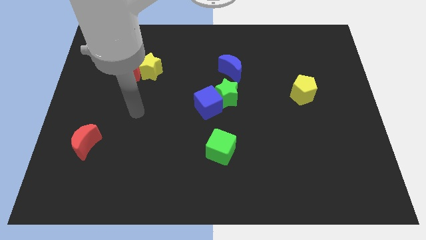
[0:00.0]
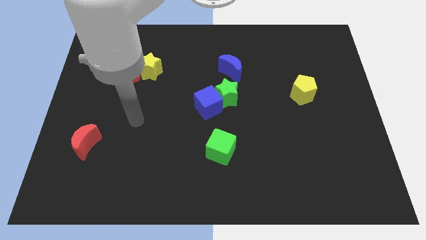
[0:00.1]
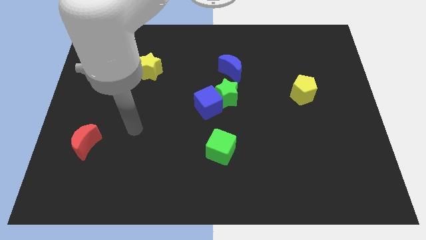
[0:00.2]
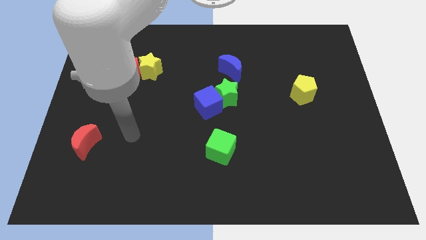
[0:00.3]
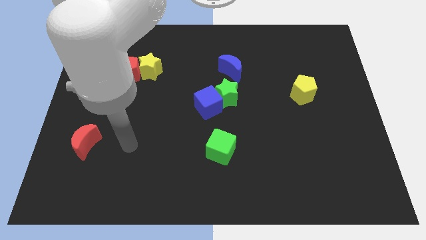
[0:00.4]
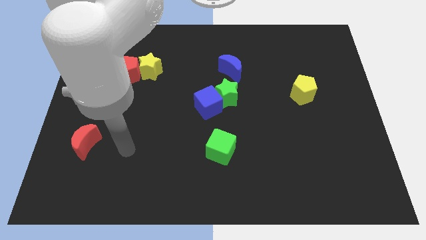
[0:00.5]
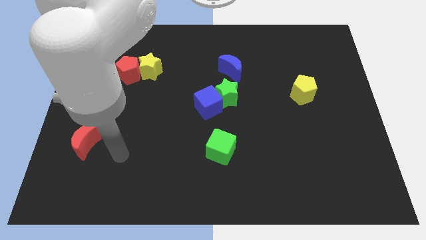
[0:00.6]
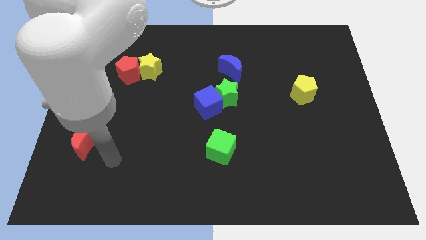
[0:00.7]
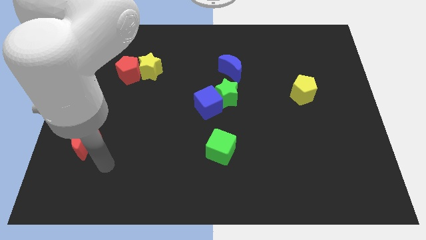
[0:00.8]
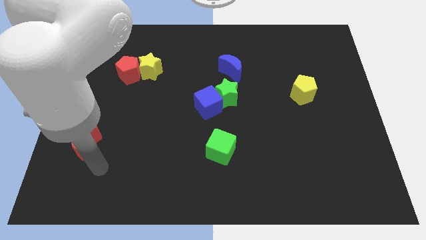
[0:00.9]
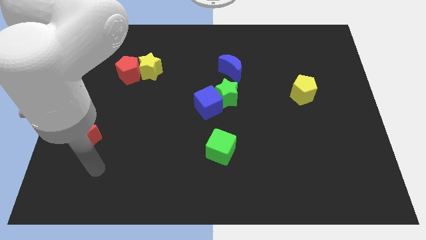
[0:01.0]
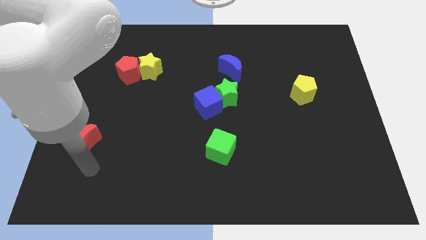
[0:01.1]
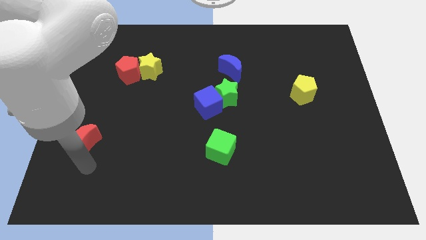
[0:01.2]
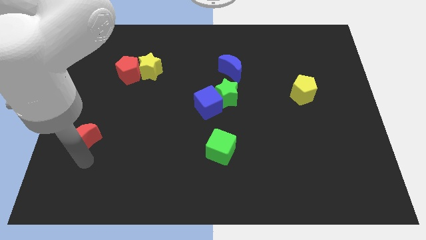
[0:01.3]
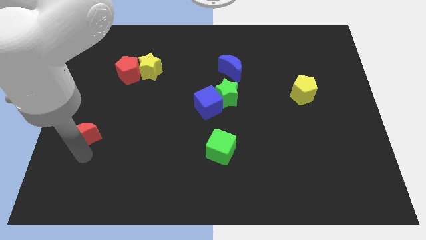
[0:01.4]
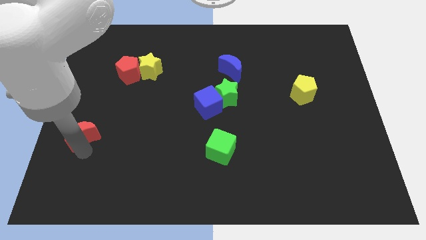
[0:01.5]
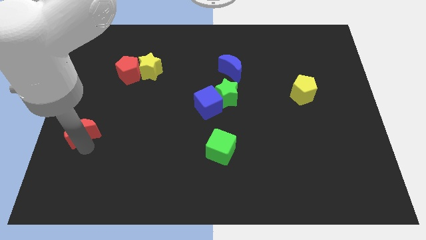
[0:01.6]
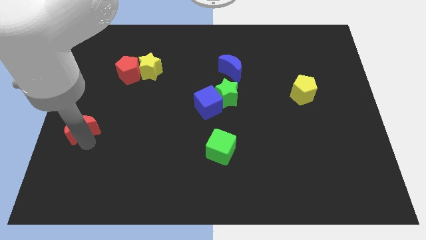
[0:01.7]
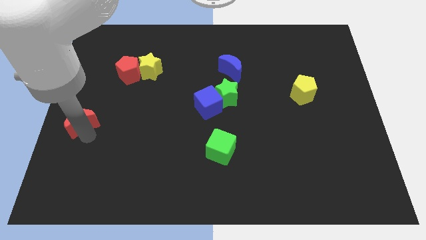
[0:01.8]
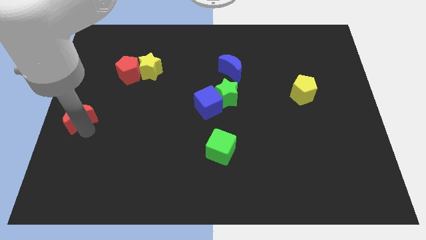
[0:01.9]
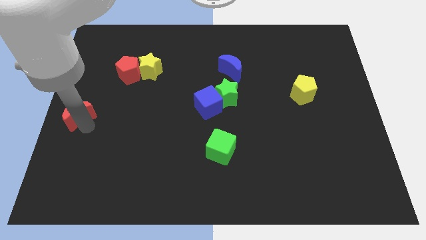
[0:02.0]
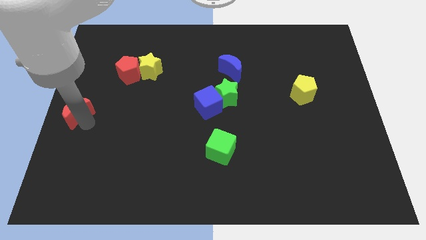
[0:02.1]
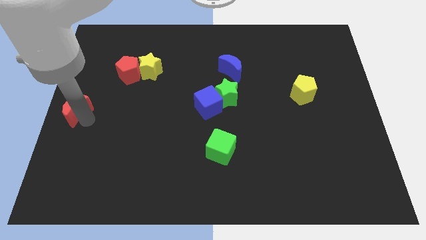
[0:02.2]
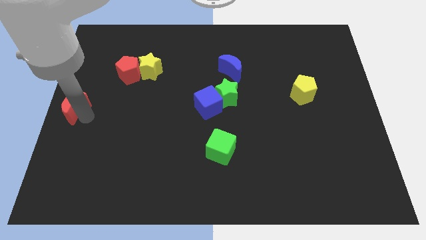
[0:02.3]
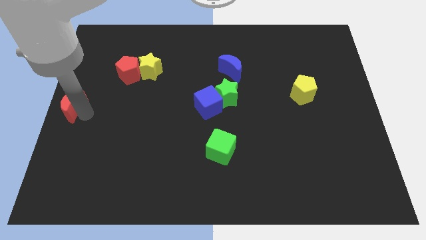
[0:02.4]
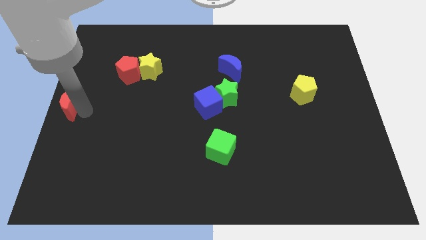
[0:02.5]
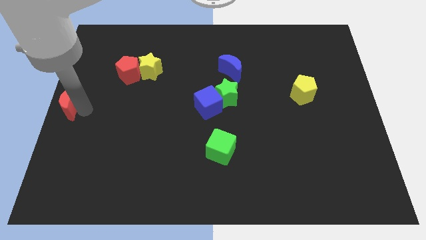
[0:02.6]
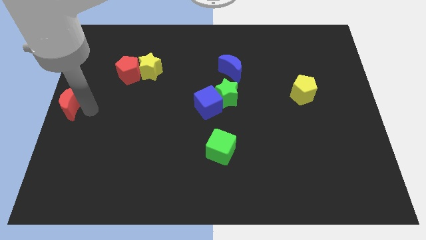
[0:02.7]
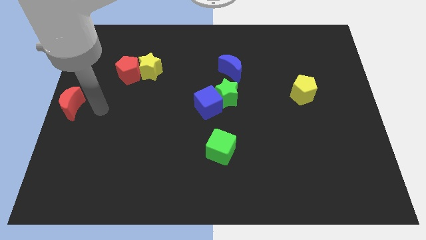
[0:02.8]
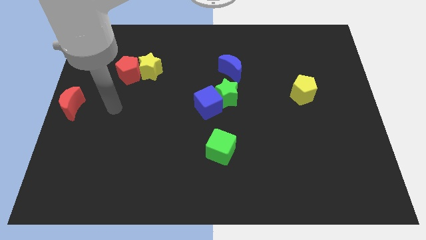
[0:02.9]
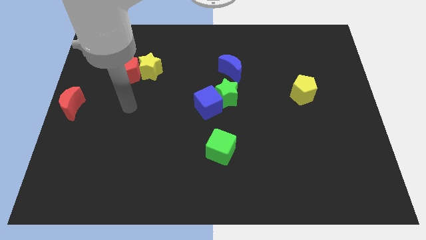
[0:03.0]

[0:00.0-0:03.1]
push the red moon at the center left of the board

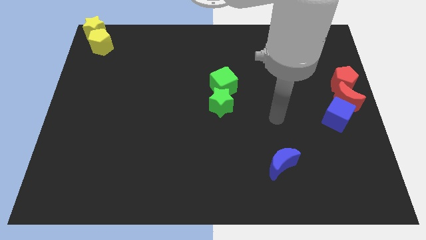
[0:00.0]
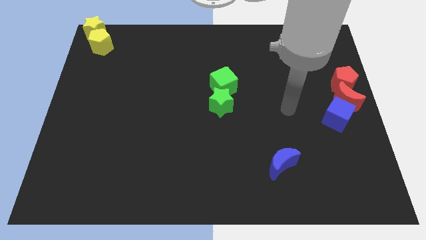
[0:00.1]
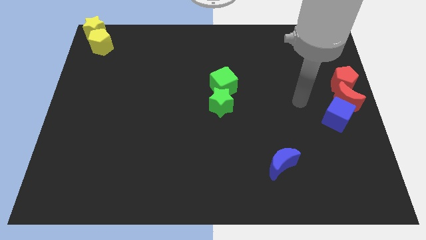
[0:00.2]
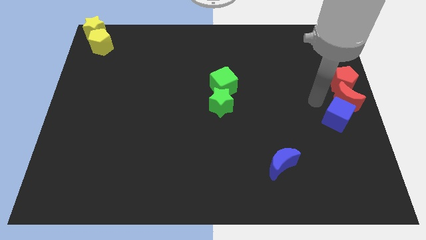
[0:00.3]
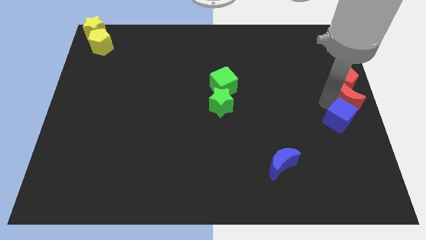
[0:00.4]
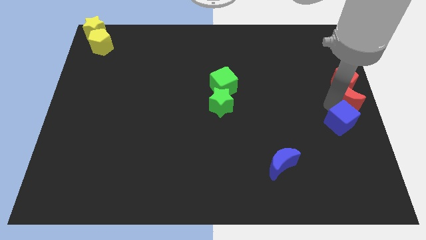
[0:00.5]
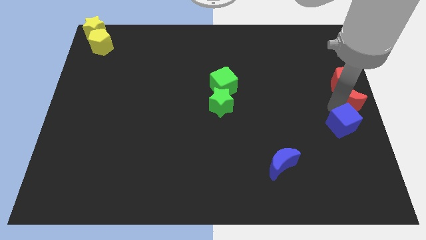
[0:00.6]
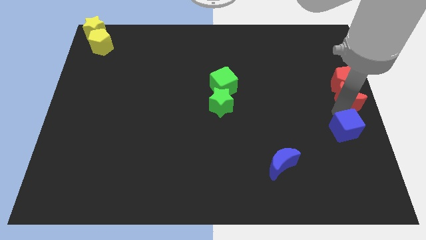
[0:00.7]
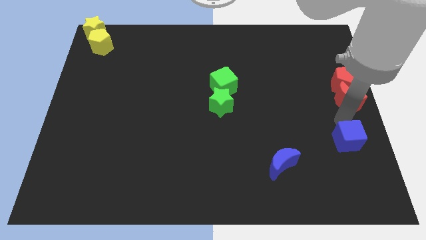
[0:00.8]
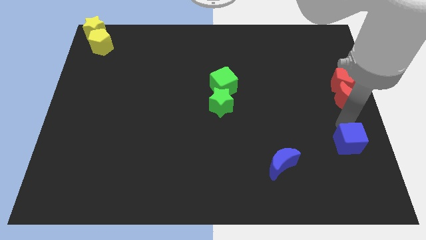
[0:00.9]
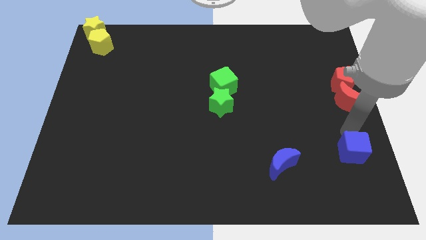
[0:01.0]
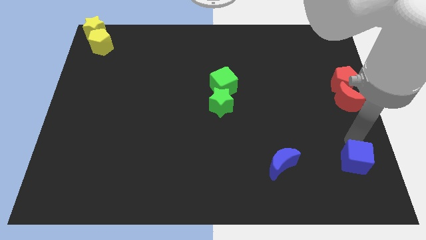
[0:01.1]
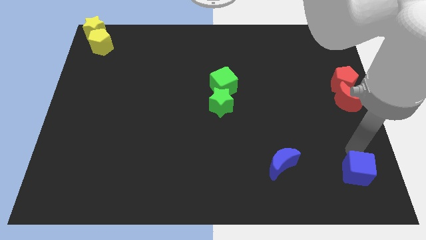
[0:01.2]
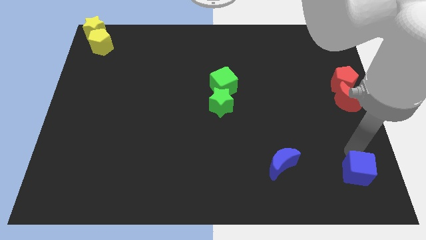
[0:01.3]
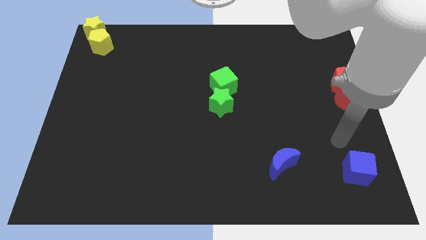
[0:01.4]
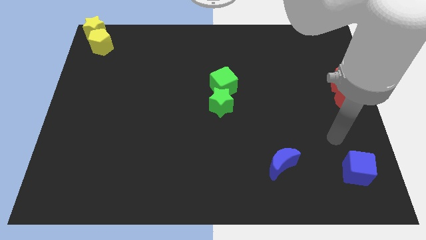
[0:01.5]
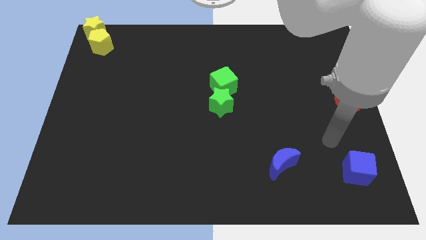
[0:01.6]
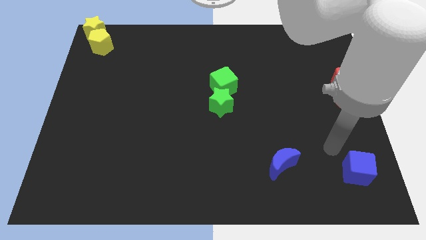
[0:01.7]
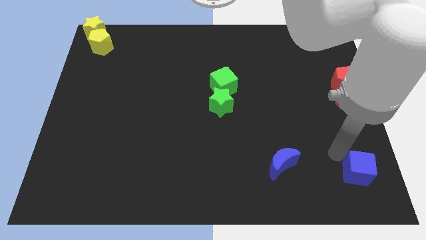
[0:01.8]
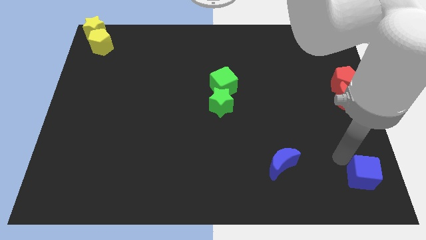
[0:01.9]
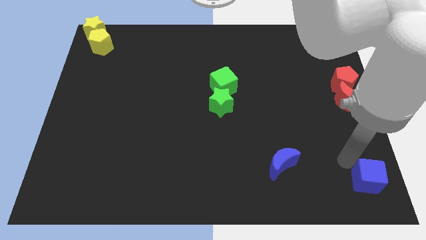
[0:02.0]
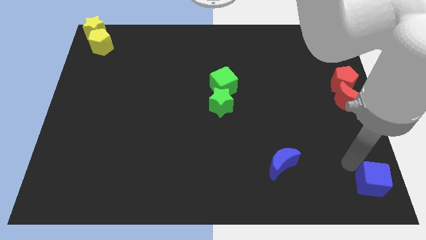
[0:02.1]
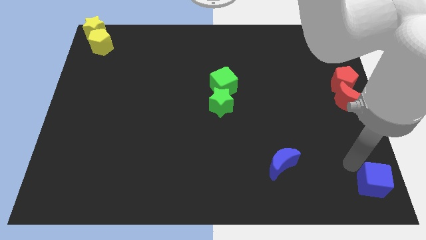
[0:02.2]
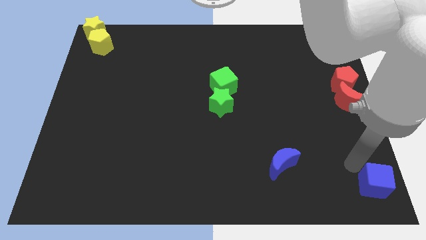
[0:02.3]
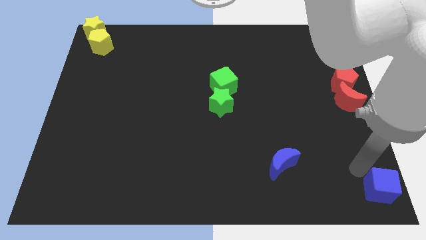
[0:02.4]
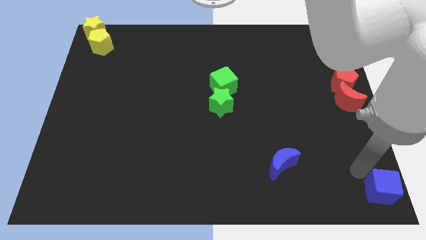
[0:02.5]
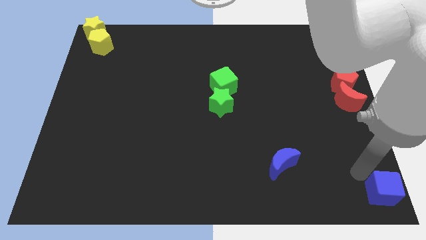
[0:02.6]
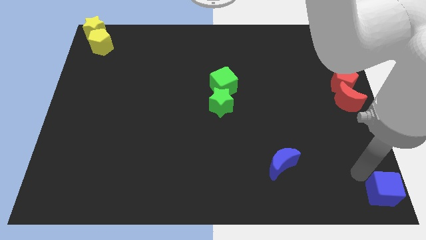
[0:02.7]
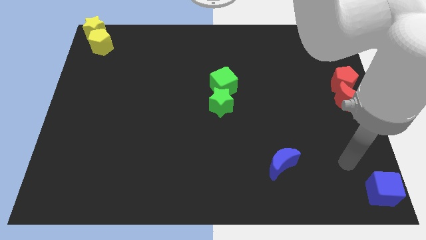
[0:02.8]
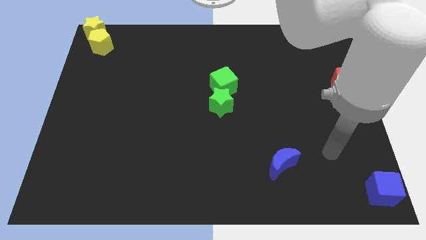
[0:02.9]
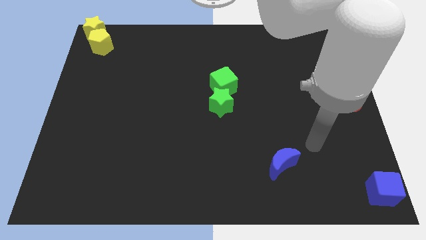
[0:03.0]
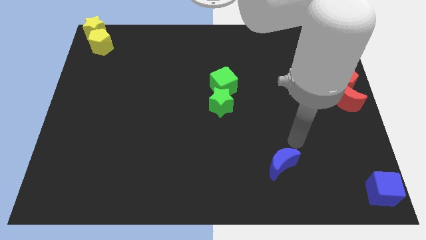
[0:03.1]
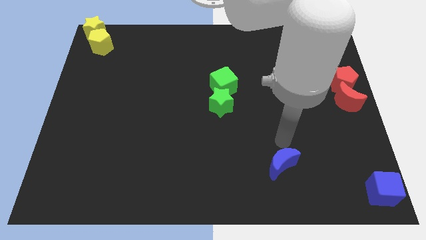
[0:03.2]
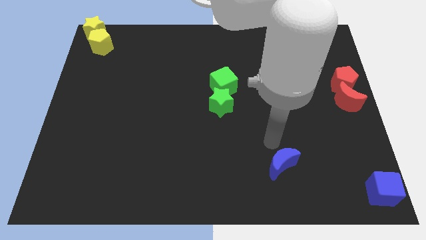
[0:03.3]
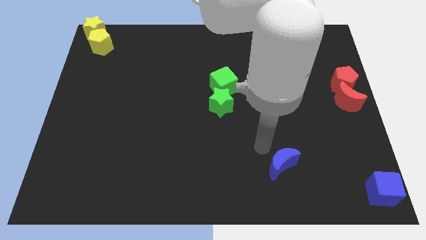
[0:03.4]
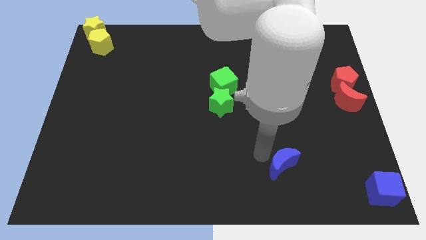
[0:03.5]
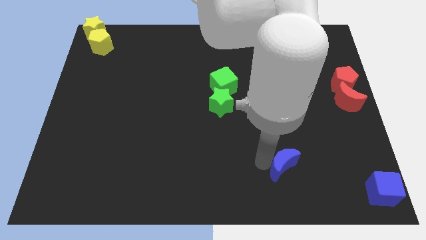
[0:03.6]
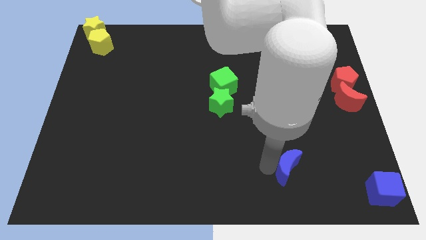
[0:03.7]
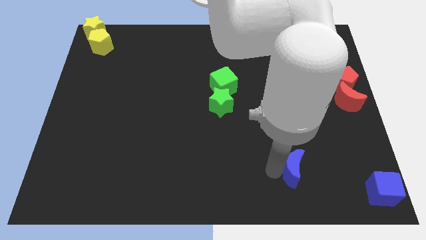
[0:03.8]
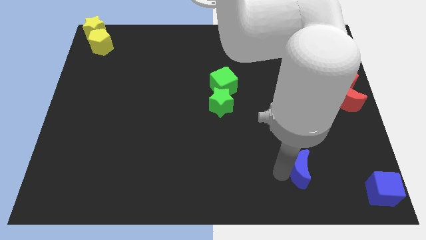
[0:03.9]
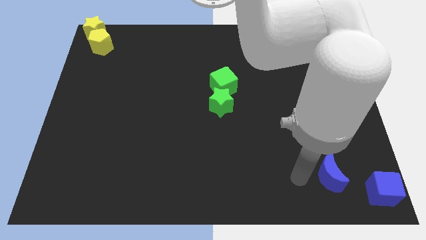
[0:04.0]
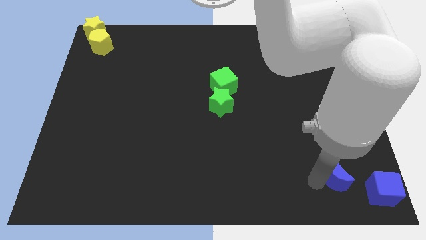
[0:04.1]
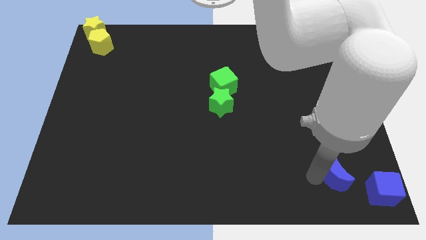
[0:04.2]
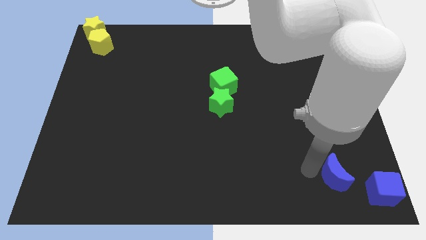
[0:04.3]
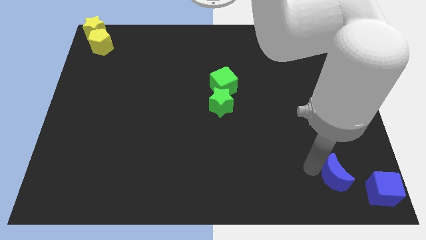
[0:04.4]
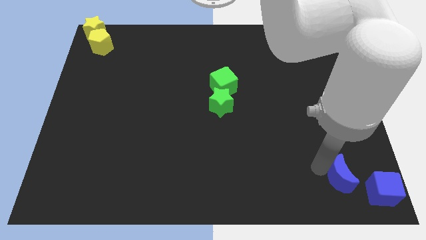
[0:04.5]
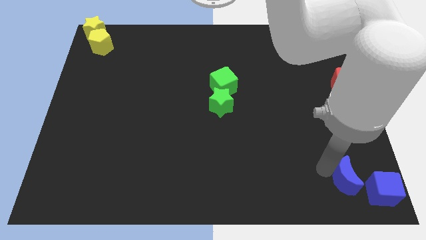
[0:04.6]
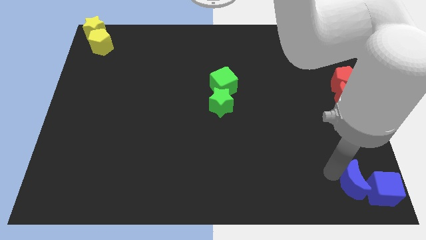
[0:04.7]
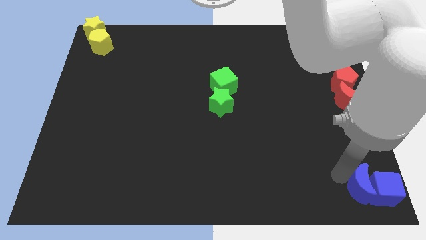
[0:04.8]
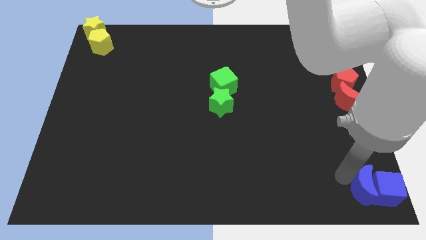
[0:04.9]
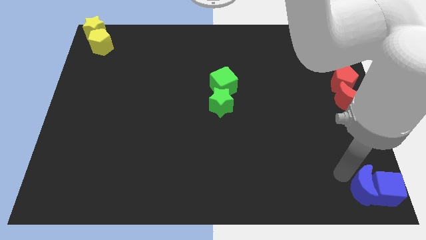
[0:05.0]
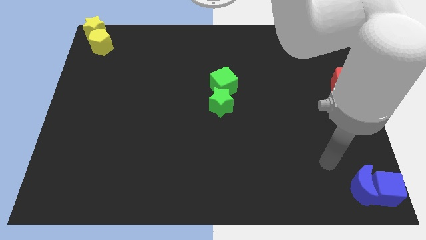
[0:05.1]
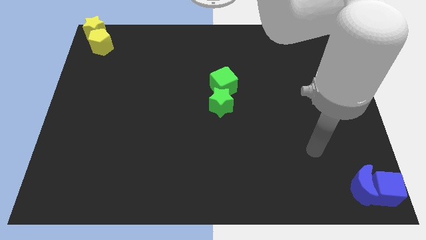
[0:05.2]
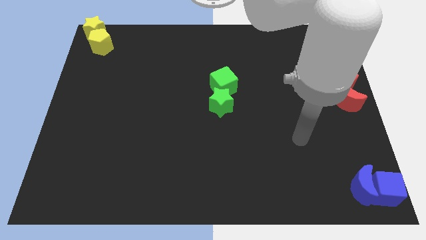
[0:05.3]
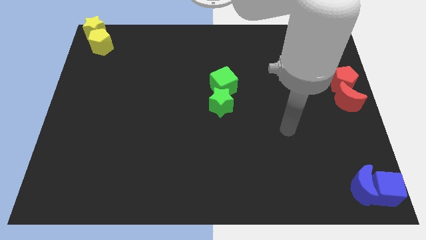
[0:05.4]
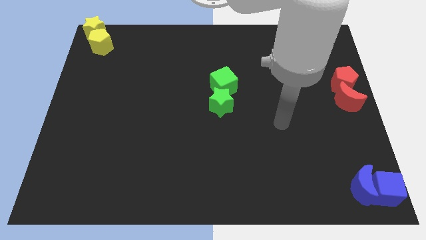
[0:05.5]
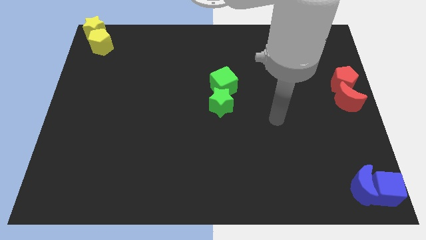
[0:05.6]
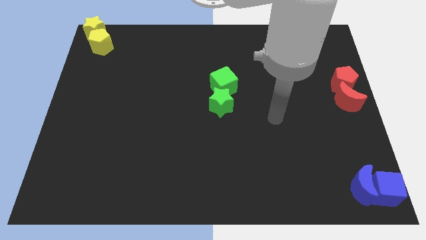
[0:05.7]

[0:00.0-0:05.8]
move the blue blocks to the bottom right
